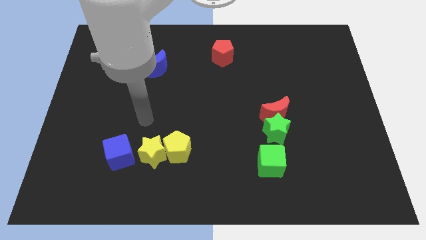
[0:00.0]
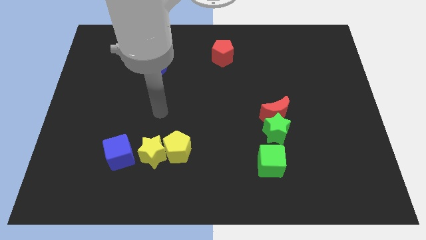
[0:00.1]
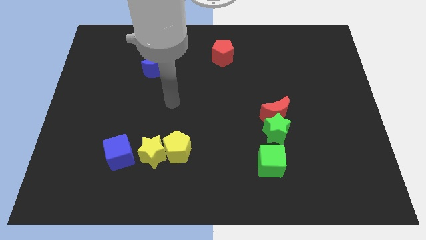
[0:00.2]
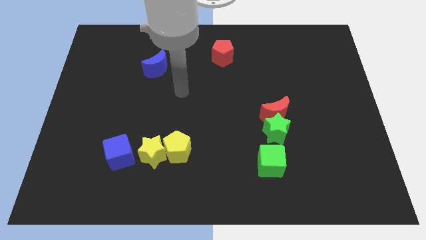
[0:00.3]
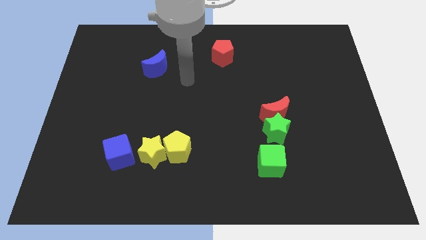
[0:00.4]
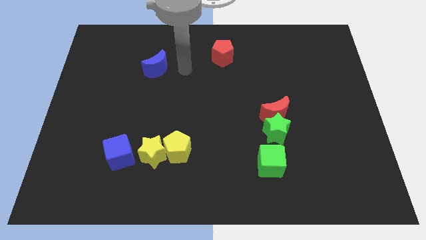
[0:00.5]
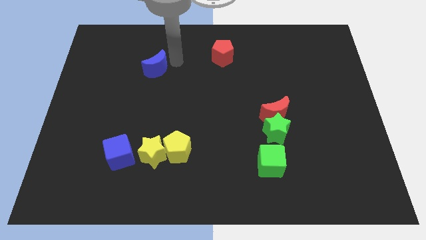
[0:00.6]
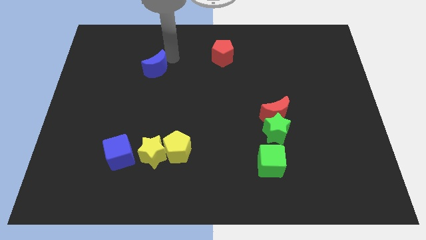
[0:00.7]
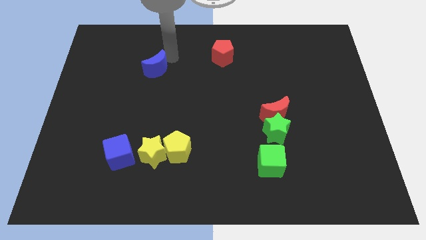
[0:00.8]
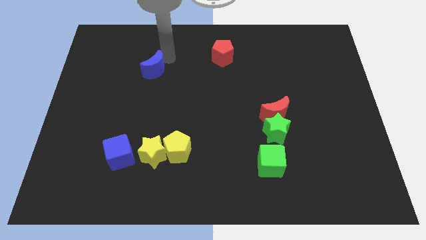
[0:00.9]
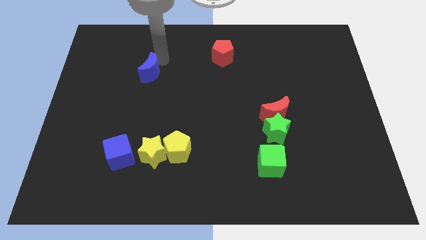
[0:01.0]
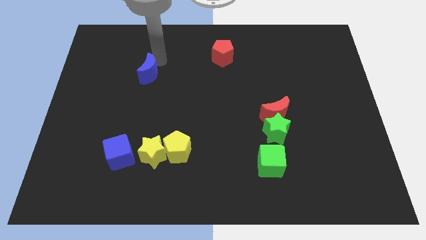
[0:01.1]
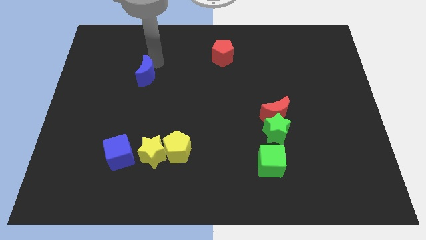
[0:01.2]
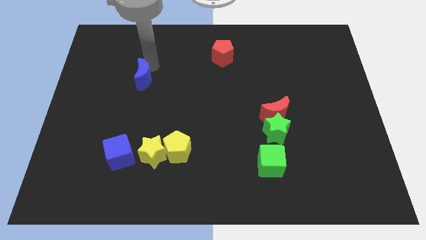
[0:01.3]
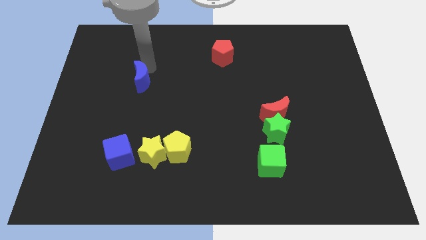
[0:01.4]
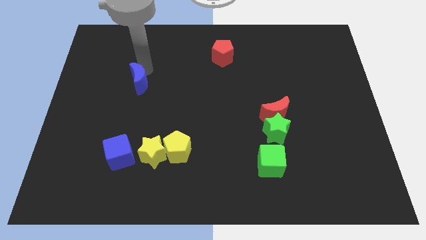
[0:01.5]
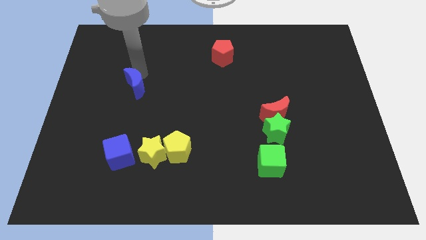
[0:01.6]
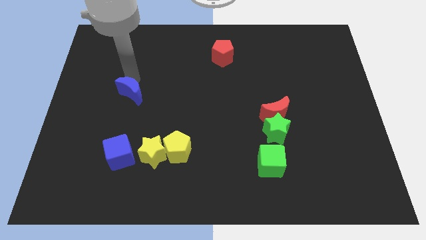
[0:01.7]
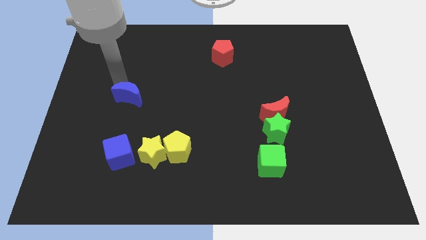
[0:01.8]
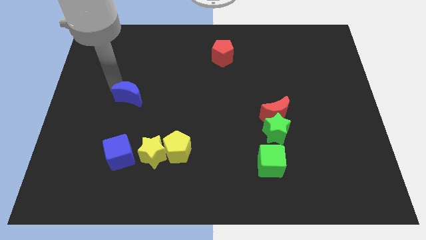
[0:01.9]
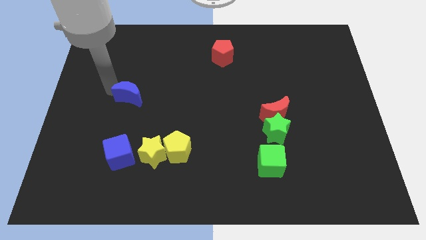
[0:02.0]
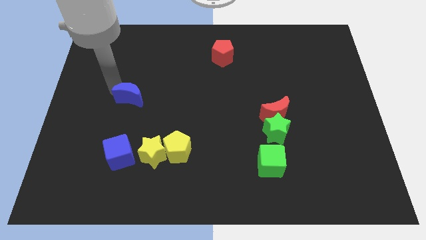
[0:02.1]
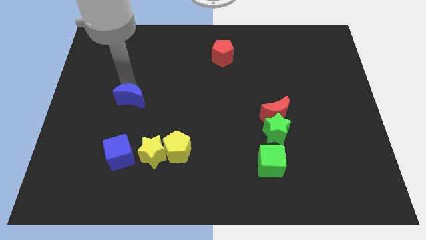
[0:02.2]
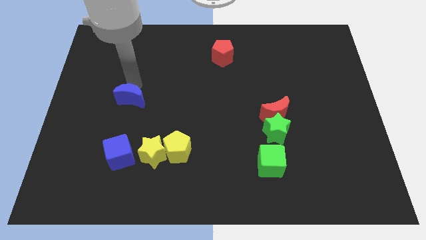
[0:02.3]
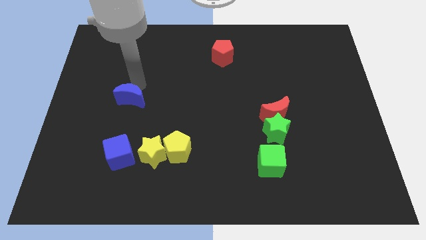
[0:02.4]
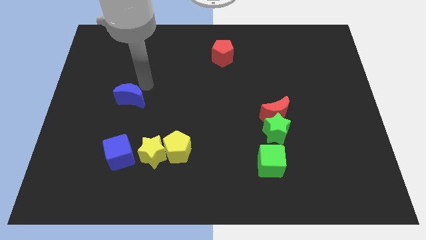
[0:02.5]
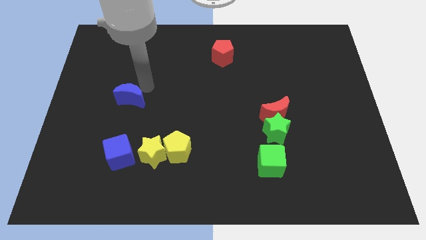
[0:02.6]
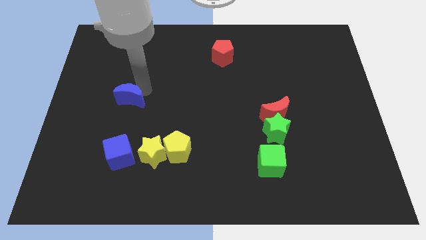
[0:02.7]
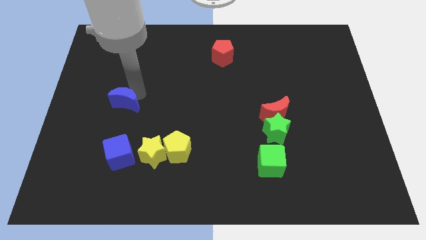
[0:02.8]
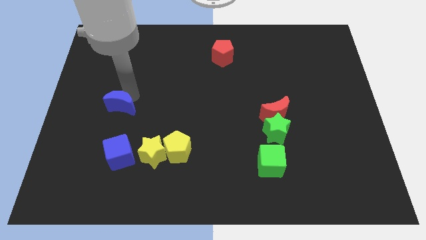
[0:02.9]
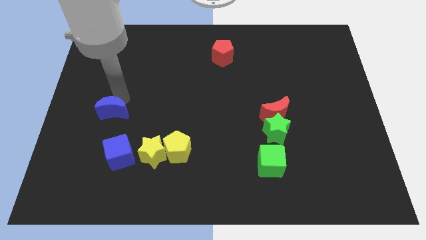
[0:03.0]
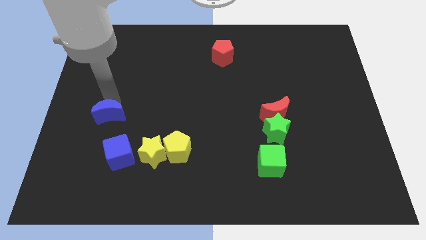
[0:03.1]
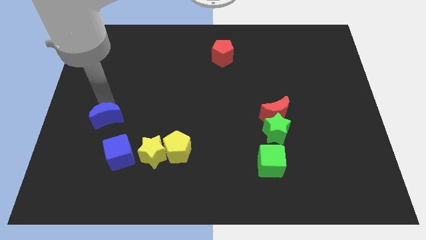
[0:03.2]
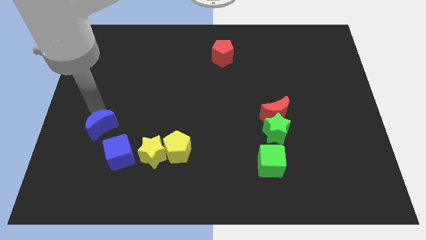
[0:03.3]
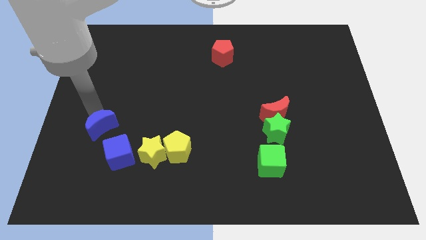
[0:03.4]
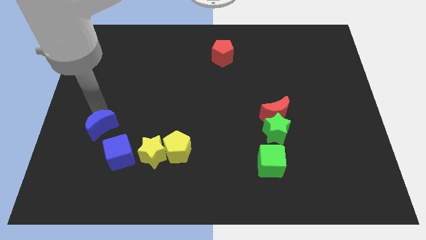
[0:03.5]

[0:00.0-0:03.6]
put the blue moon diagonally top left to the blue cube

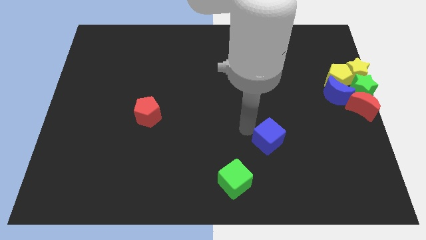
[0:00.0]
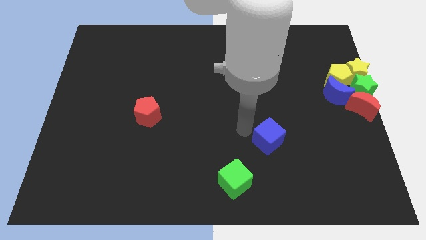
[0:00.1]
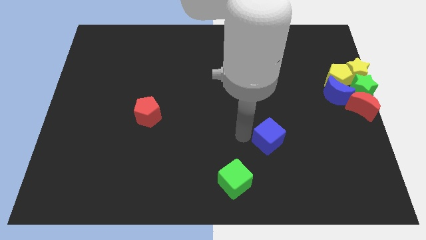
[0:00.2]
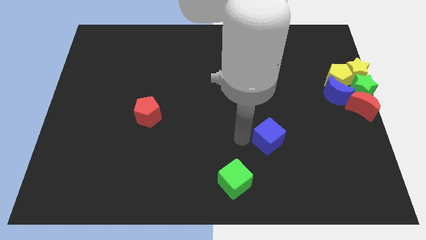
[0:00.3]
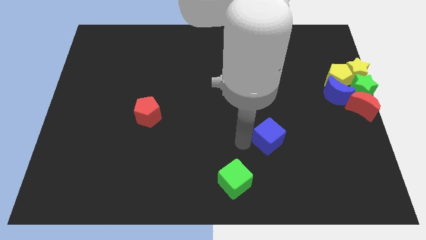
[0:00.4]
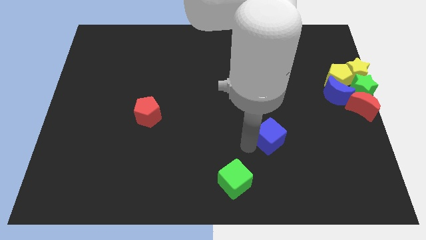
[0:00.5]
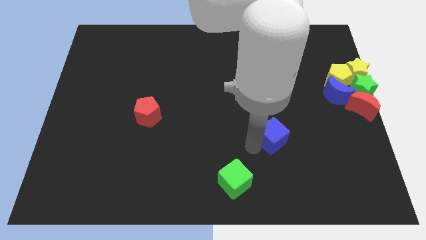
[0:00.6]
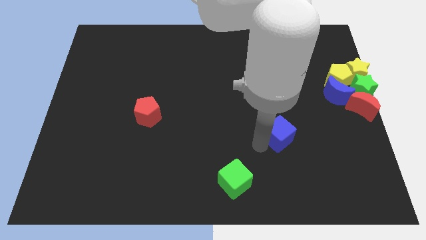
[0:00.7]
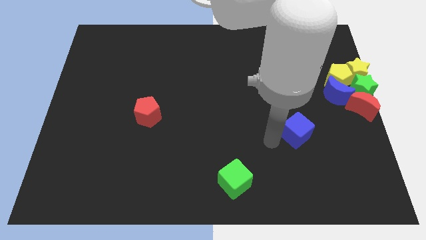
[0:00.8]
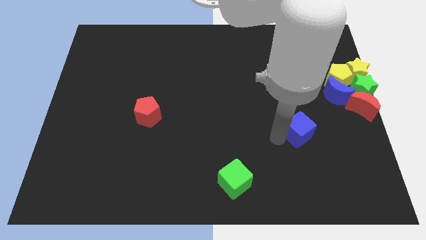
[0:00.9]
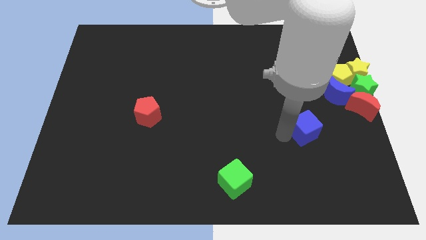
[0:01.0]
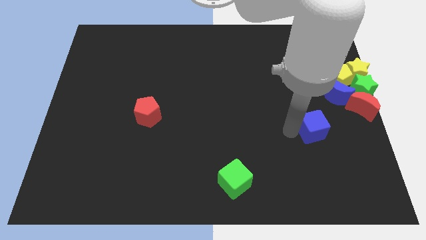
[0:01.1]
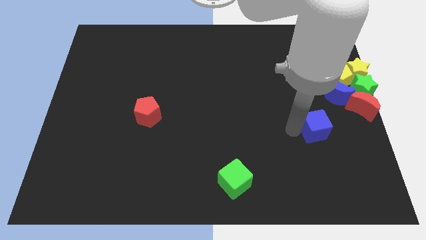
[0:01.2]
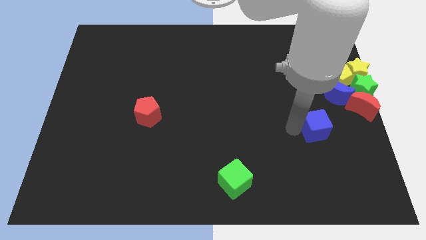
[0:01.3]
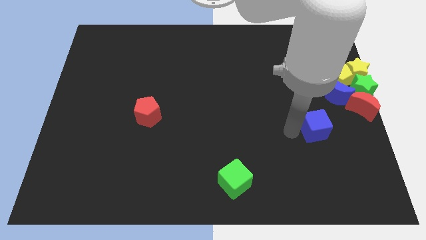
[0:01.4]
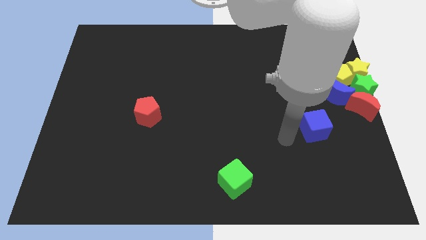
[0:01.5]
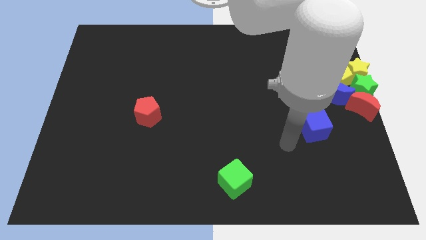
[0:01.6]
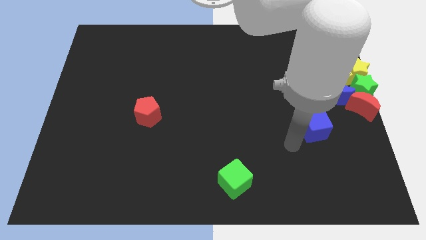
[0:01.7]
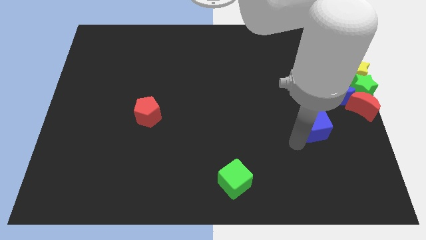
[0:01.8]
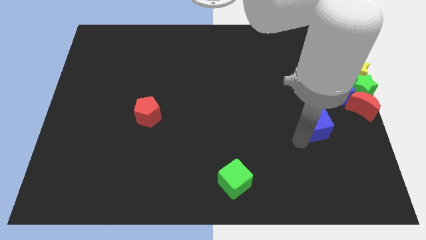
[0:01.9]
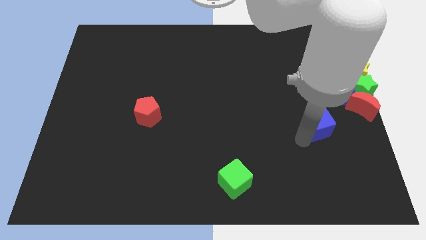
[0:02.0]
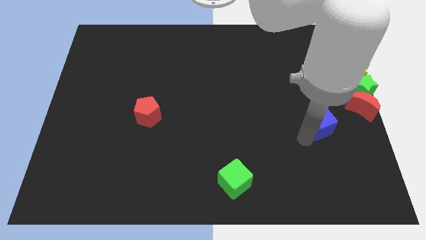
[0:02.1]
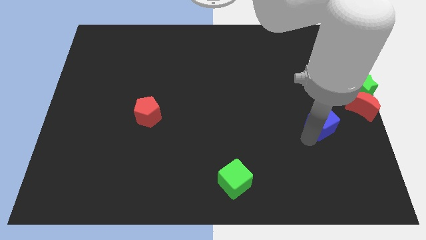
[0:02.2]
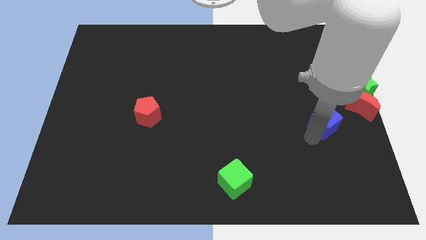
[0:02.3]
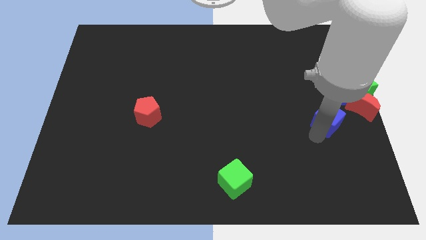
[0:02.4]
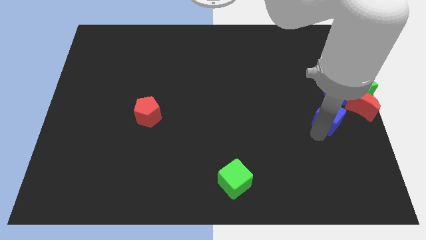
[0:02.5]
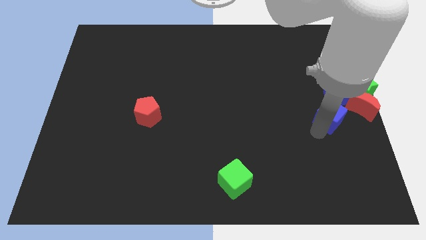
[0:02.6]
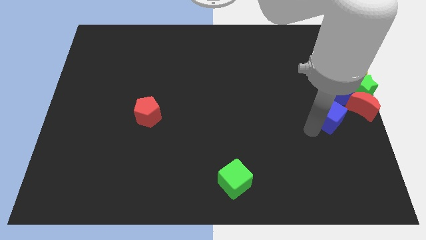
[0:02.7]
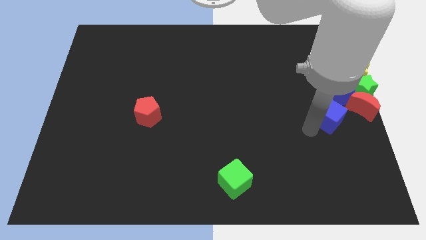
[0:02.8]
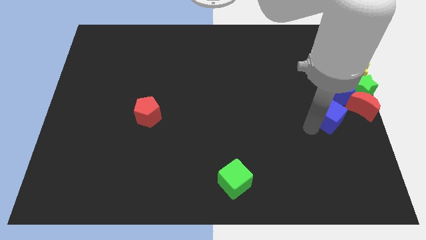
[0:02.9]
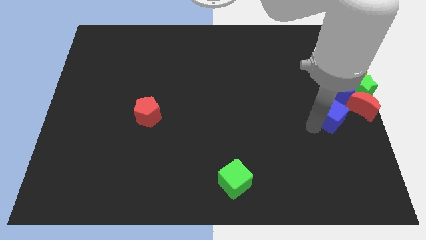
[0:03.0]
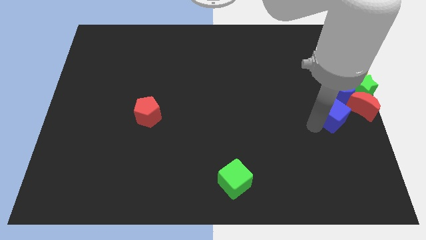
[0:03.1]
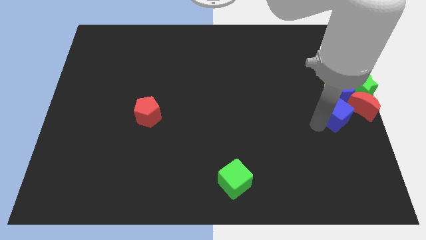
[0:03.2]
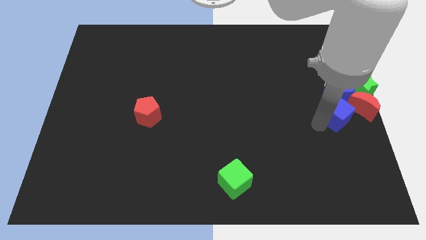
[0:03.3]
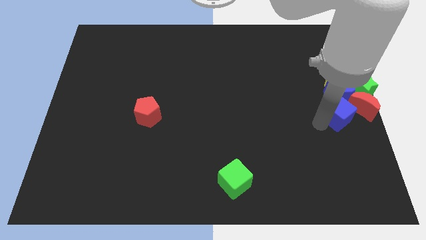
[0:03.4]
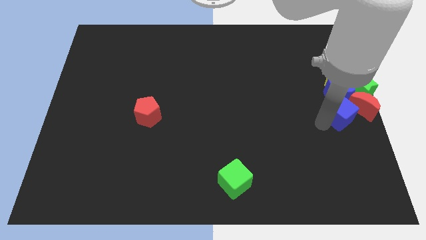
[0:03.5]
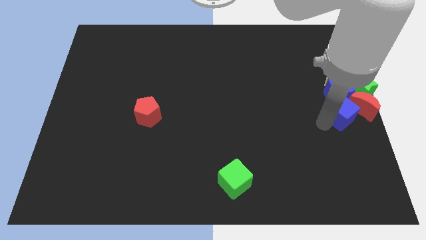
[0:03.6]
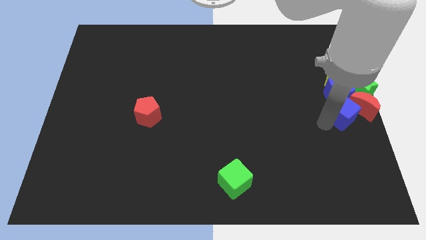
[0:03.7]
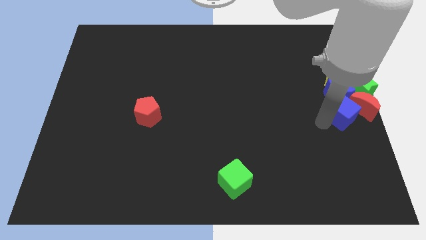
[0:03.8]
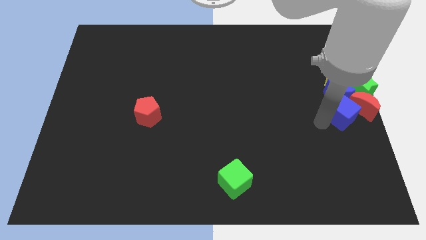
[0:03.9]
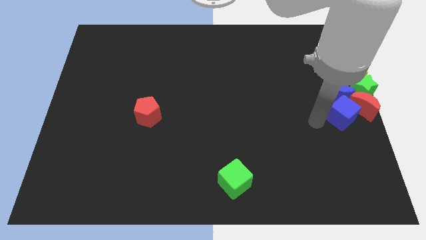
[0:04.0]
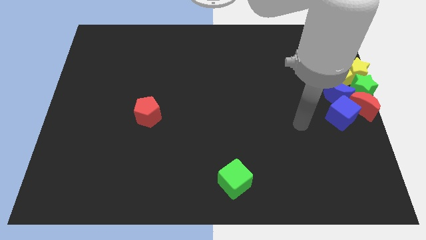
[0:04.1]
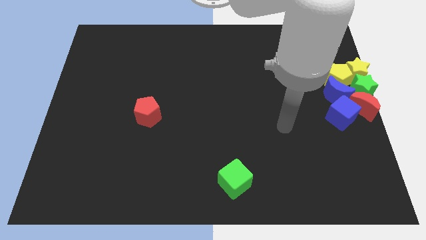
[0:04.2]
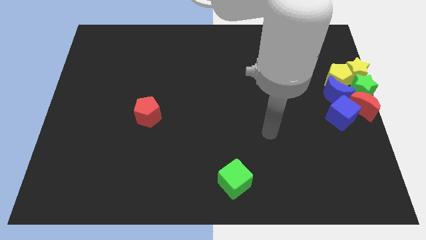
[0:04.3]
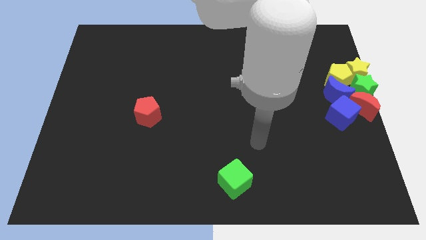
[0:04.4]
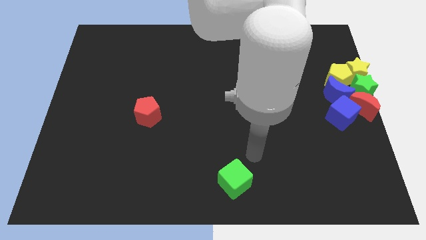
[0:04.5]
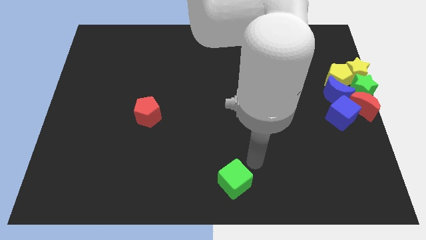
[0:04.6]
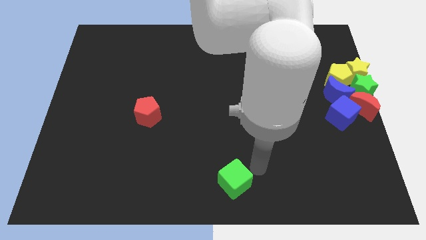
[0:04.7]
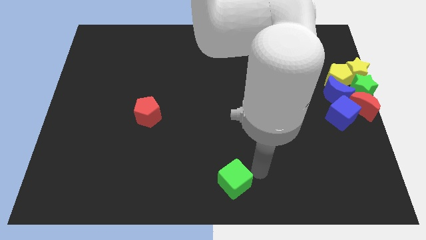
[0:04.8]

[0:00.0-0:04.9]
place blue cube close to red and blue crescent

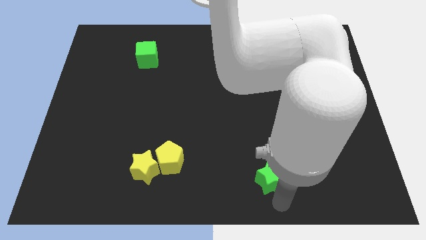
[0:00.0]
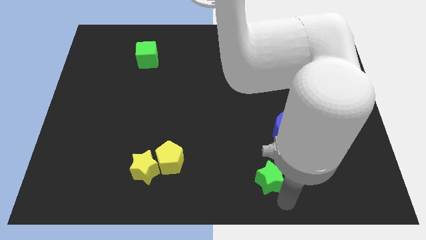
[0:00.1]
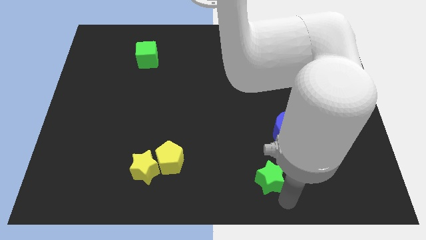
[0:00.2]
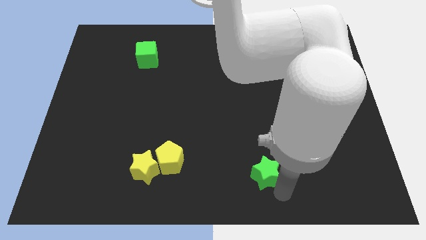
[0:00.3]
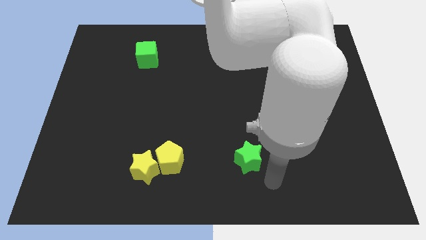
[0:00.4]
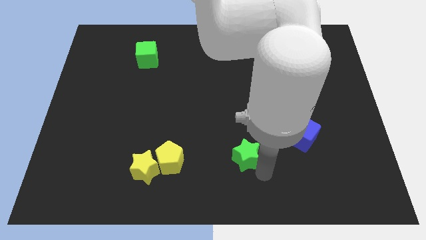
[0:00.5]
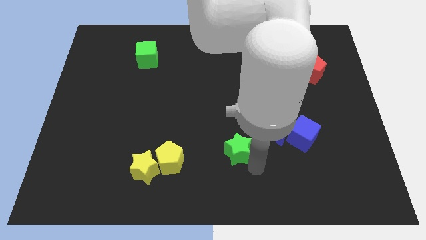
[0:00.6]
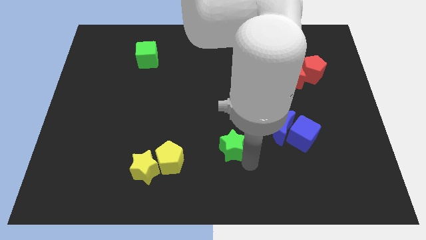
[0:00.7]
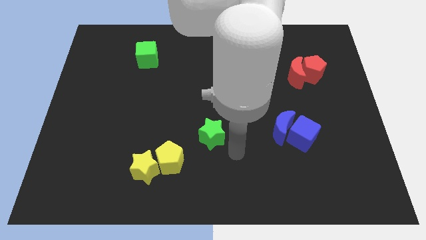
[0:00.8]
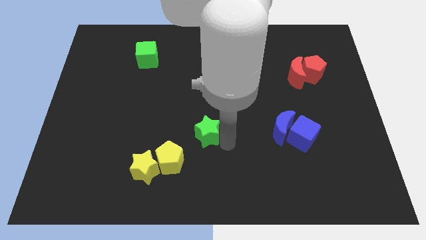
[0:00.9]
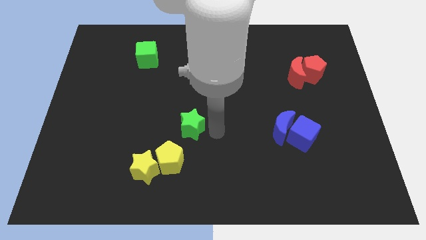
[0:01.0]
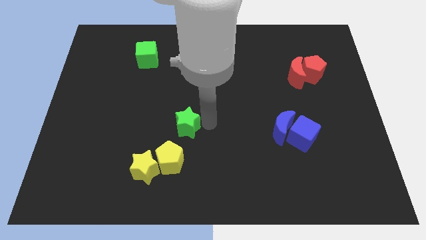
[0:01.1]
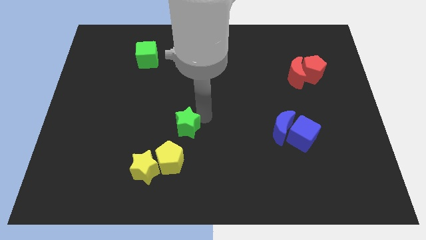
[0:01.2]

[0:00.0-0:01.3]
put the green star parallel left to the blue moon
